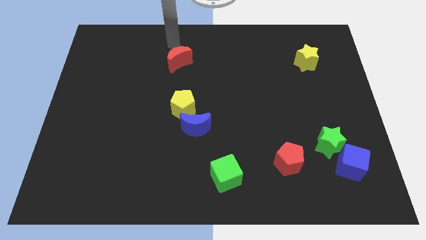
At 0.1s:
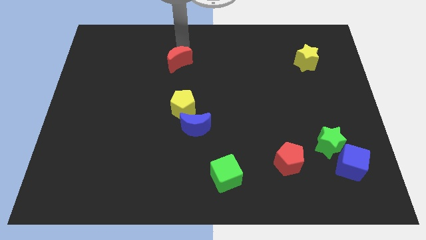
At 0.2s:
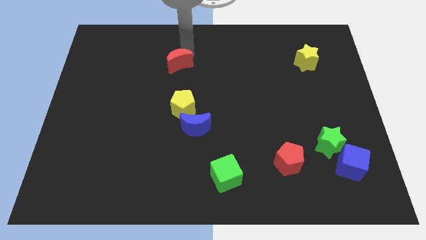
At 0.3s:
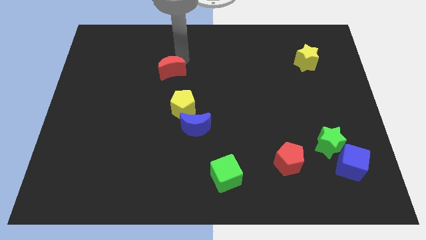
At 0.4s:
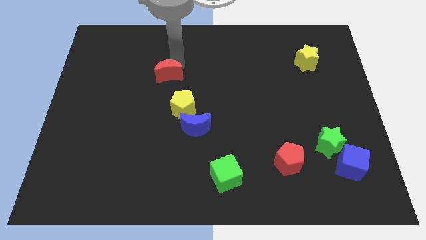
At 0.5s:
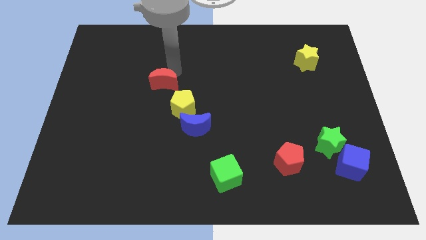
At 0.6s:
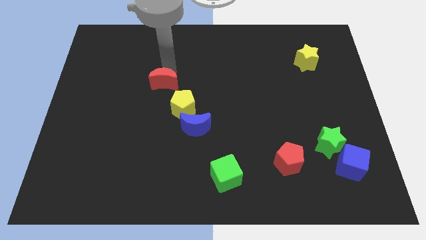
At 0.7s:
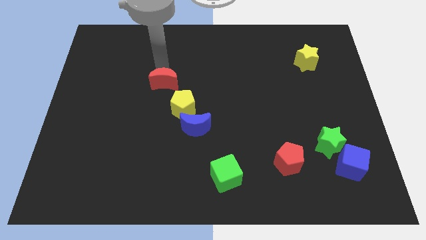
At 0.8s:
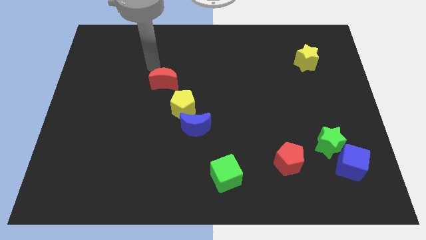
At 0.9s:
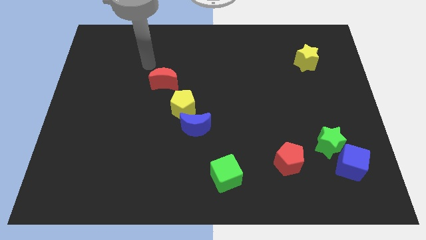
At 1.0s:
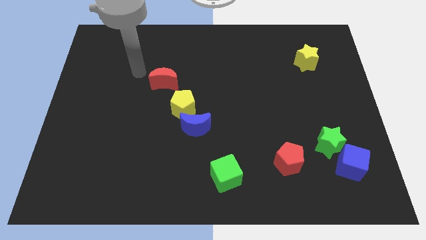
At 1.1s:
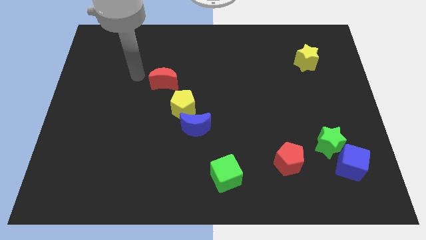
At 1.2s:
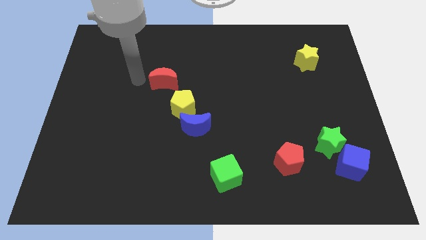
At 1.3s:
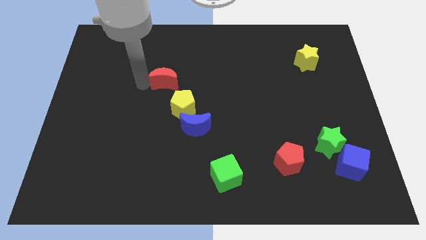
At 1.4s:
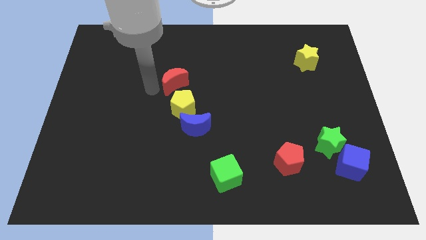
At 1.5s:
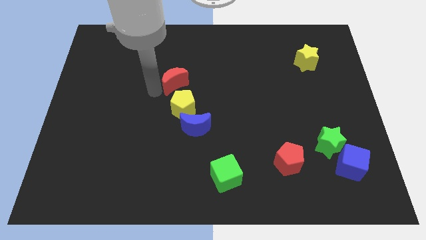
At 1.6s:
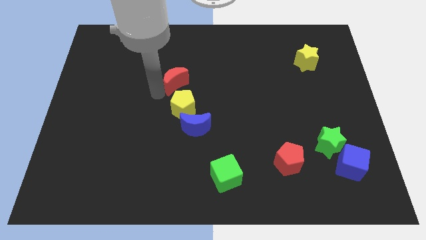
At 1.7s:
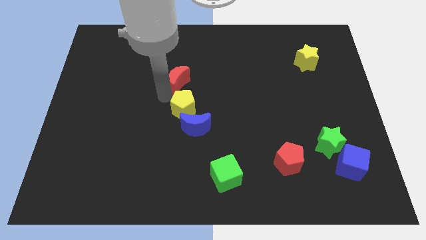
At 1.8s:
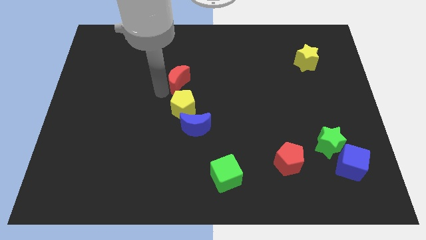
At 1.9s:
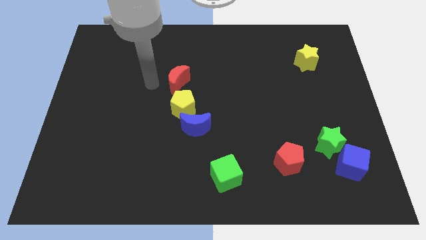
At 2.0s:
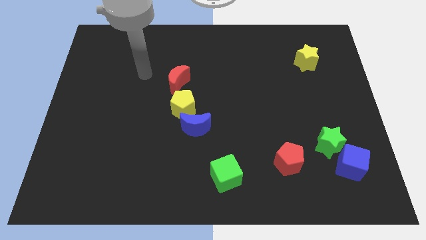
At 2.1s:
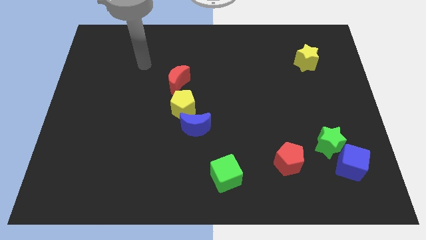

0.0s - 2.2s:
push the red moon above the yellow pentagon

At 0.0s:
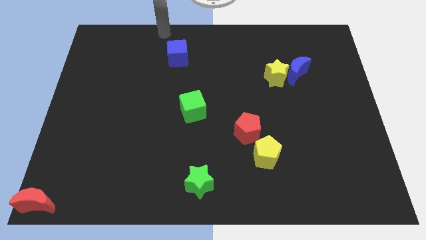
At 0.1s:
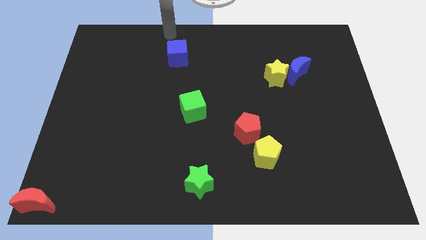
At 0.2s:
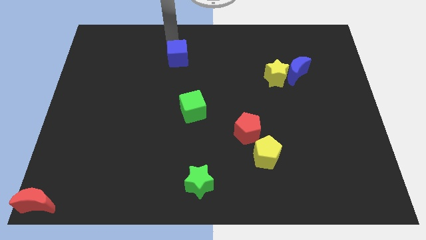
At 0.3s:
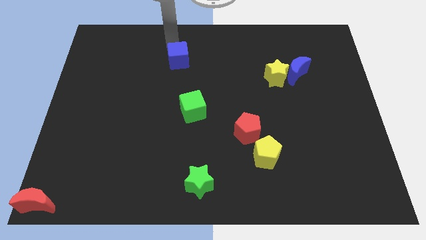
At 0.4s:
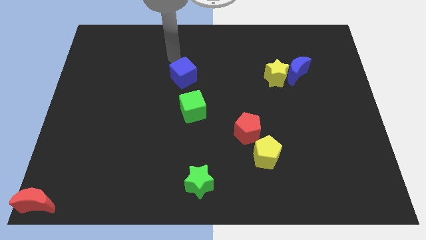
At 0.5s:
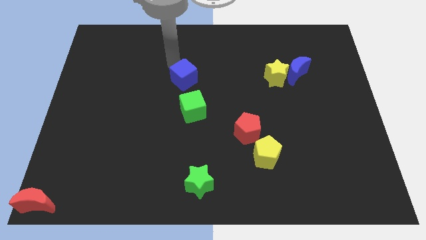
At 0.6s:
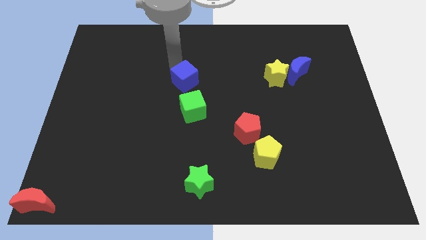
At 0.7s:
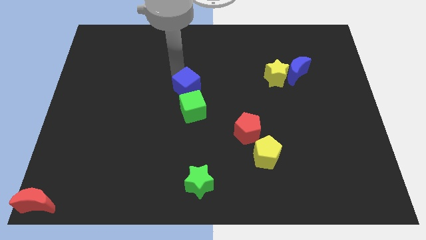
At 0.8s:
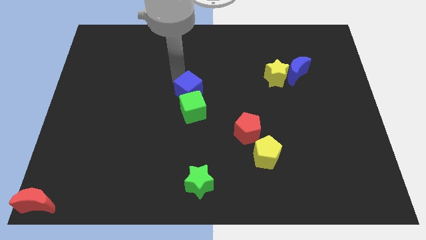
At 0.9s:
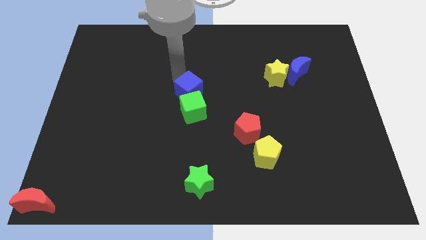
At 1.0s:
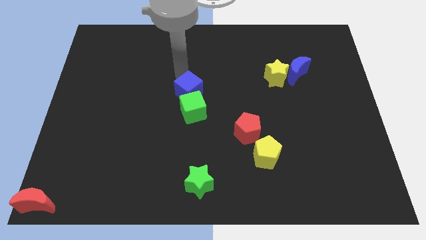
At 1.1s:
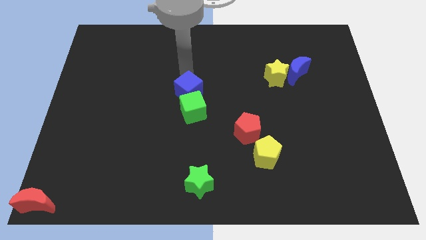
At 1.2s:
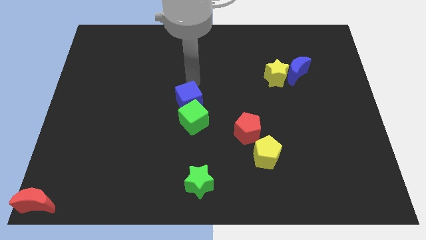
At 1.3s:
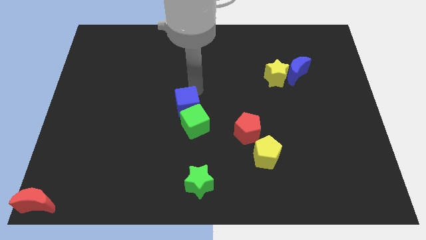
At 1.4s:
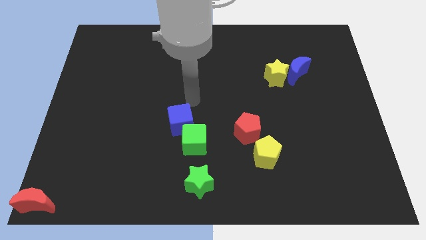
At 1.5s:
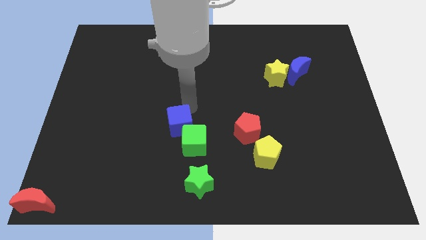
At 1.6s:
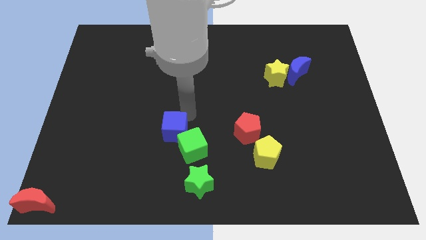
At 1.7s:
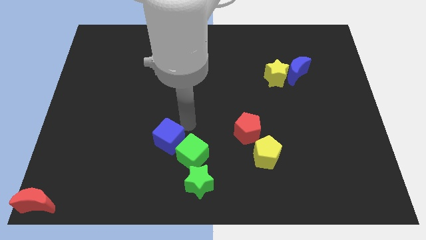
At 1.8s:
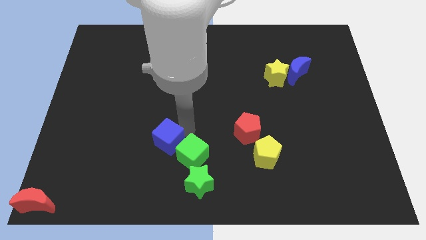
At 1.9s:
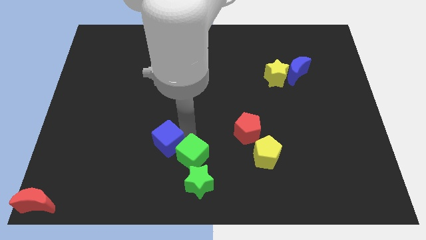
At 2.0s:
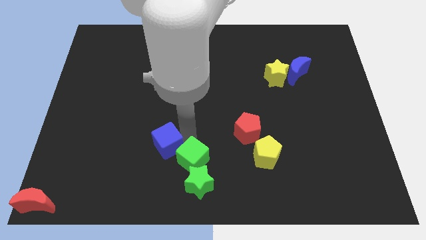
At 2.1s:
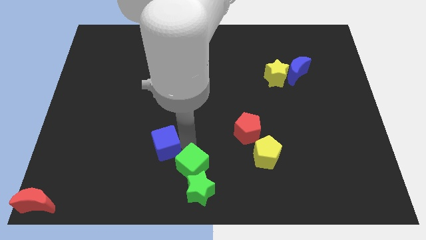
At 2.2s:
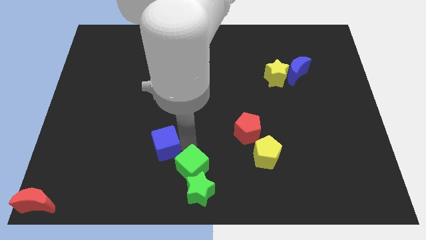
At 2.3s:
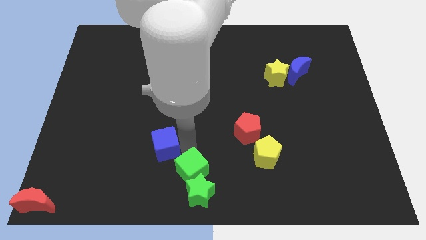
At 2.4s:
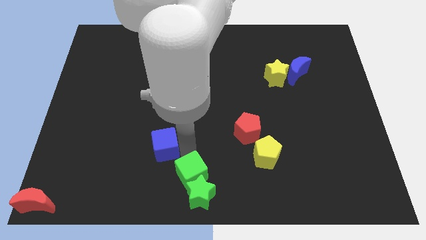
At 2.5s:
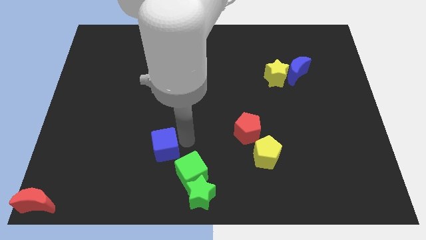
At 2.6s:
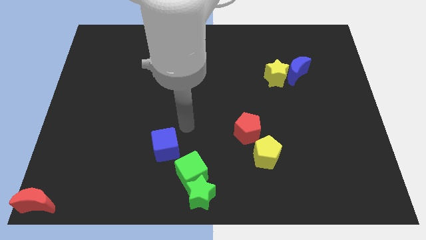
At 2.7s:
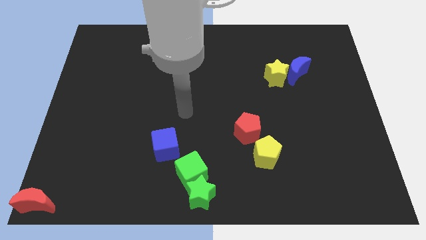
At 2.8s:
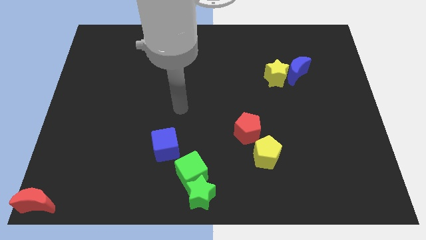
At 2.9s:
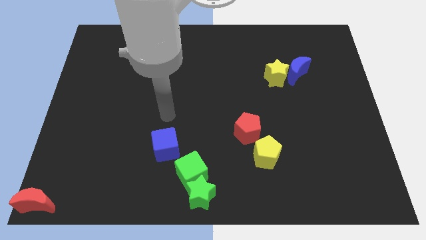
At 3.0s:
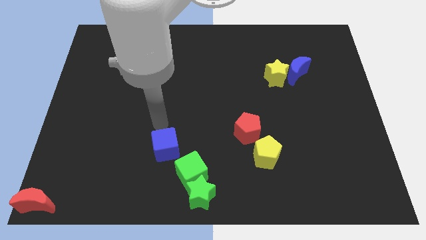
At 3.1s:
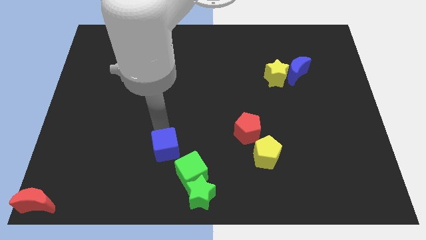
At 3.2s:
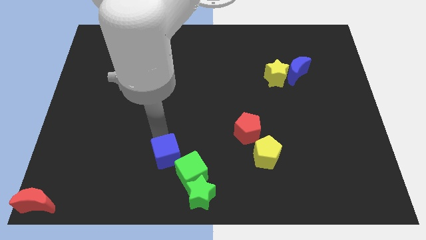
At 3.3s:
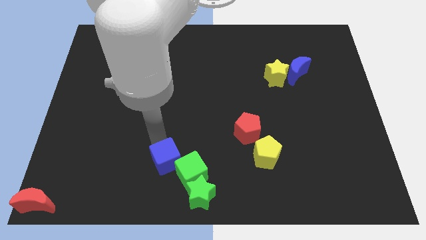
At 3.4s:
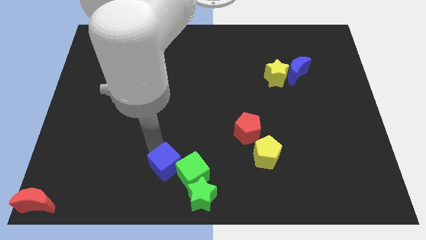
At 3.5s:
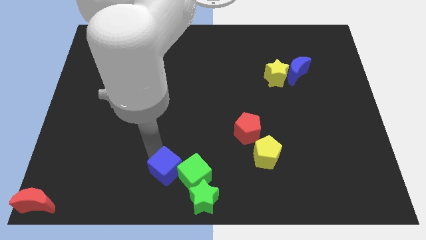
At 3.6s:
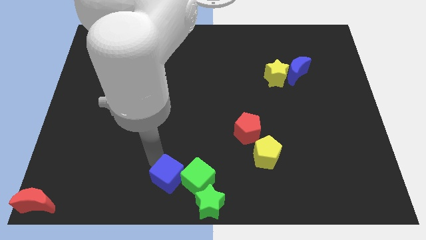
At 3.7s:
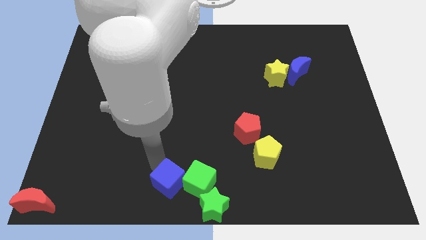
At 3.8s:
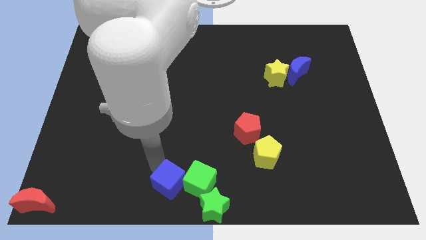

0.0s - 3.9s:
place the blue cube to the left of green cube

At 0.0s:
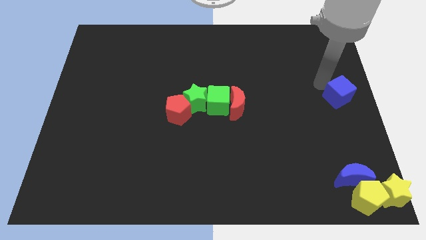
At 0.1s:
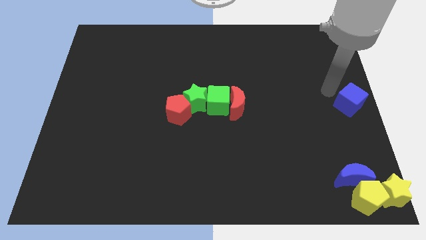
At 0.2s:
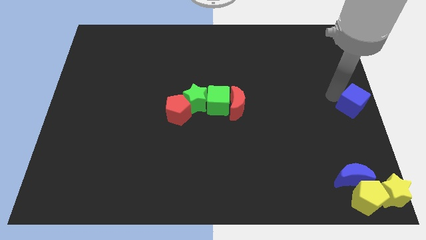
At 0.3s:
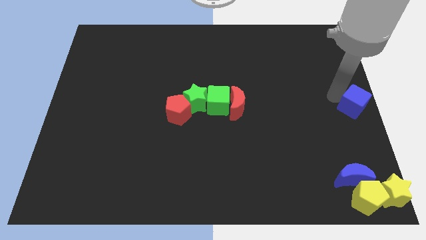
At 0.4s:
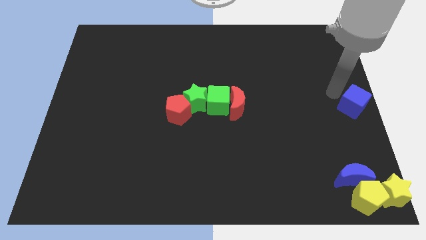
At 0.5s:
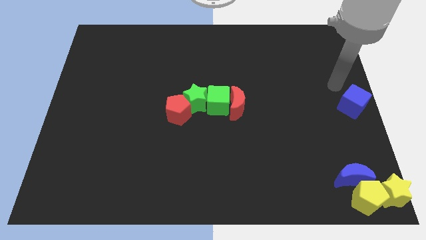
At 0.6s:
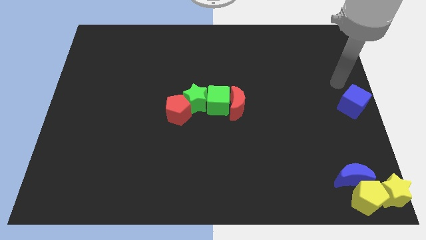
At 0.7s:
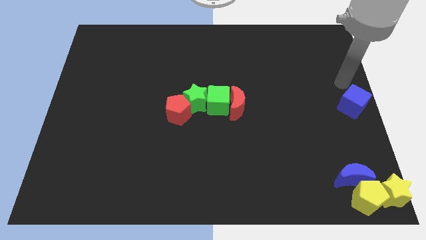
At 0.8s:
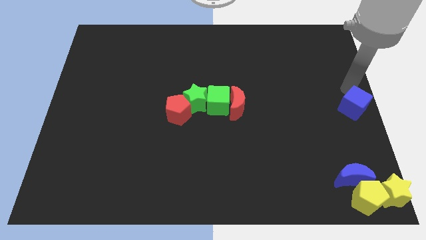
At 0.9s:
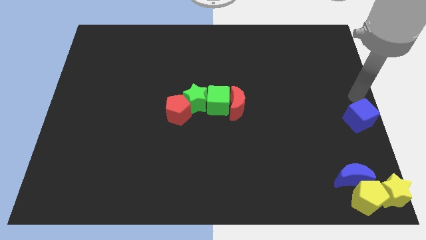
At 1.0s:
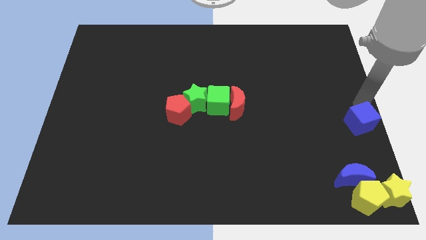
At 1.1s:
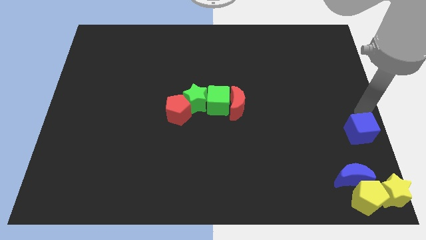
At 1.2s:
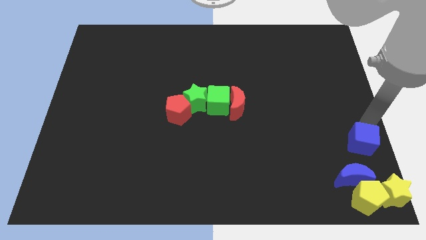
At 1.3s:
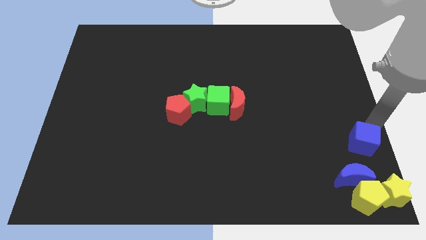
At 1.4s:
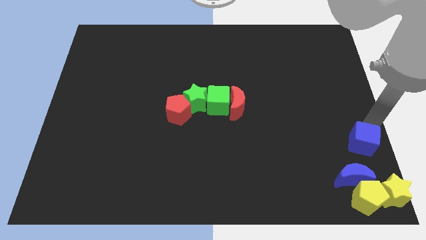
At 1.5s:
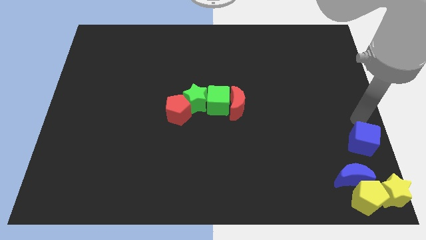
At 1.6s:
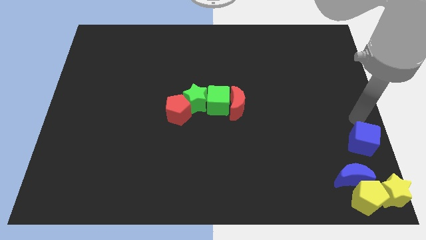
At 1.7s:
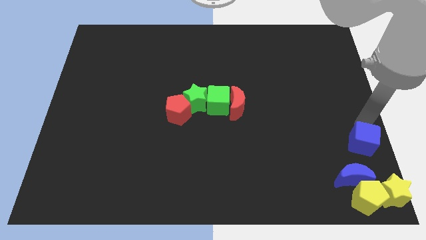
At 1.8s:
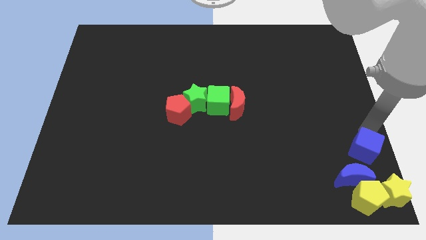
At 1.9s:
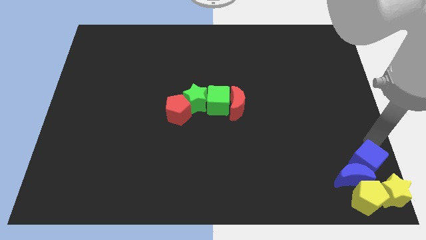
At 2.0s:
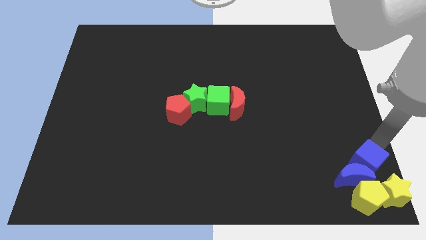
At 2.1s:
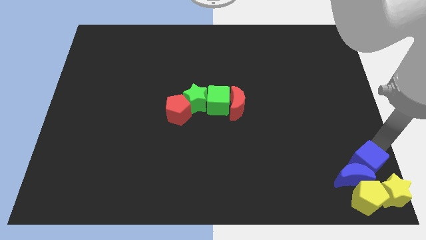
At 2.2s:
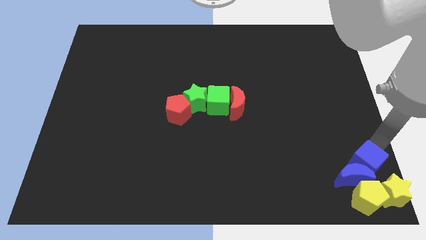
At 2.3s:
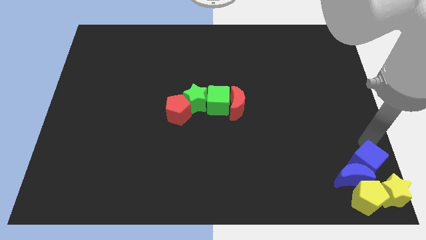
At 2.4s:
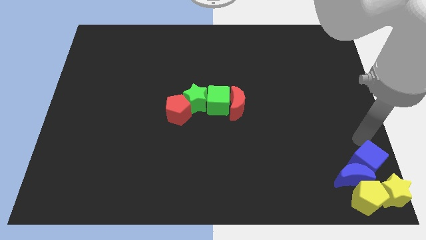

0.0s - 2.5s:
move the blue cube to the top of the blue crescent

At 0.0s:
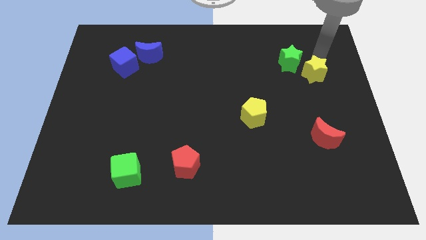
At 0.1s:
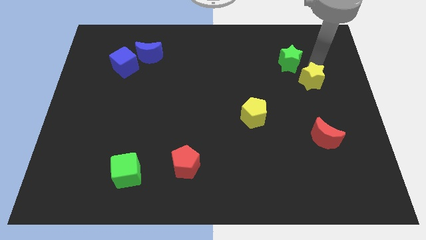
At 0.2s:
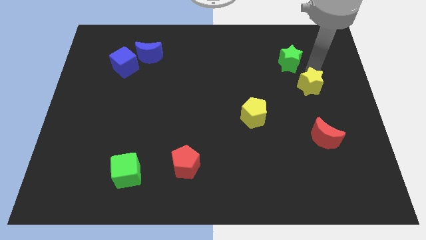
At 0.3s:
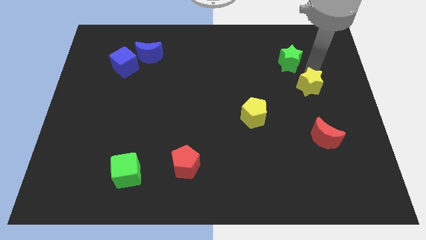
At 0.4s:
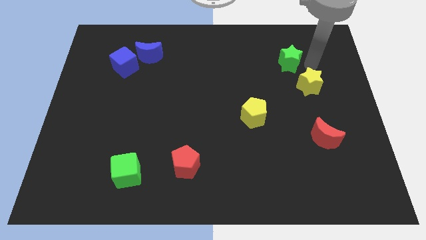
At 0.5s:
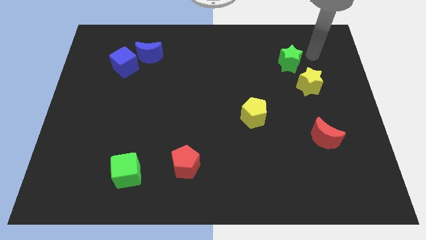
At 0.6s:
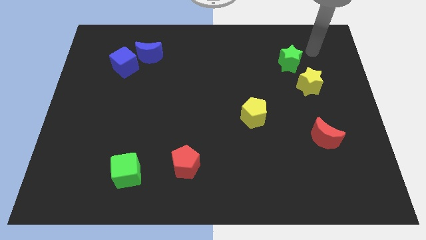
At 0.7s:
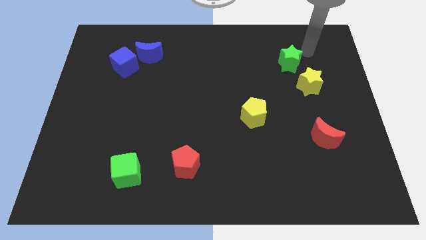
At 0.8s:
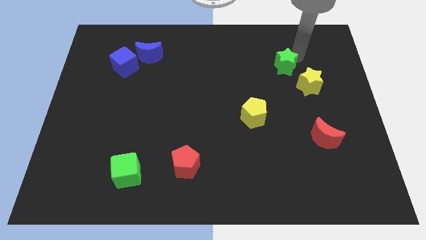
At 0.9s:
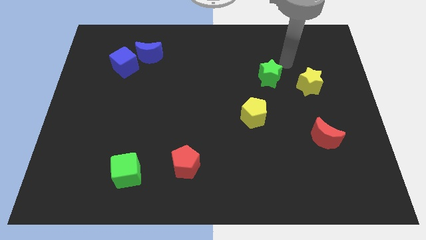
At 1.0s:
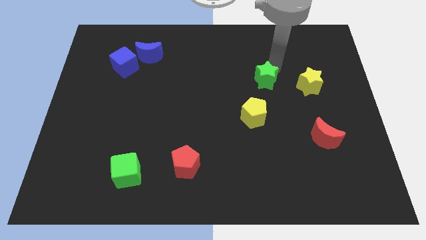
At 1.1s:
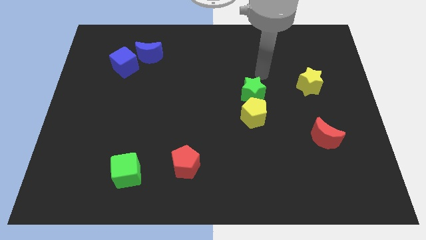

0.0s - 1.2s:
separate yellow star from green star
